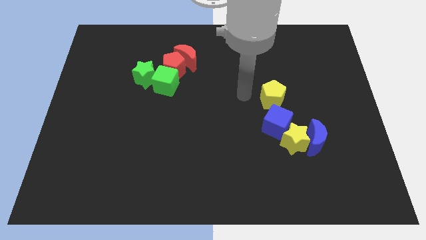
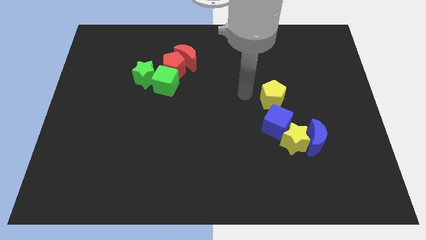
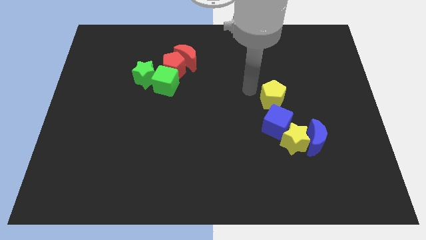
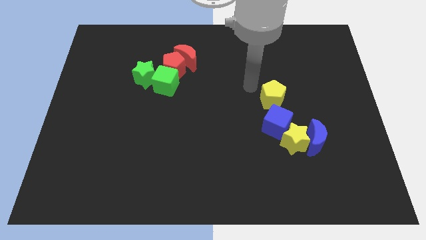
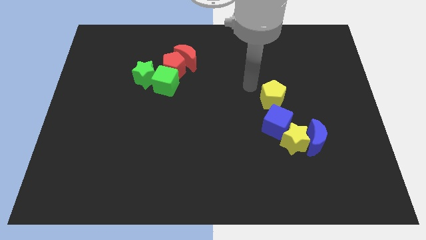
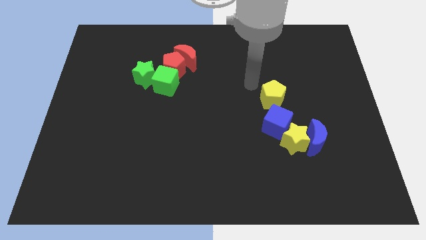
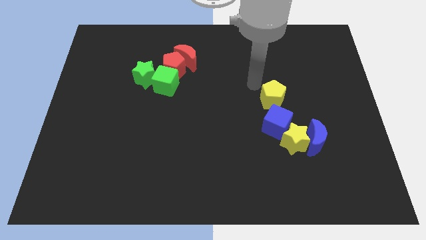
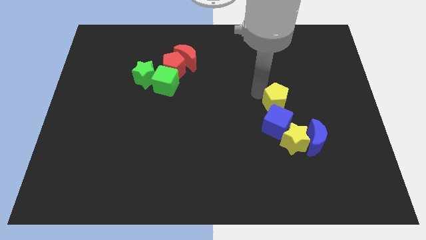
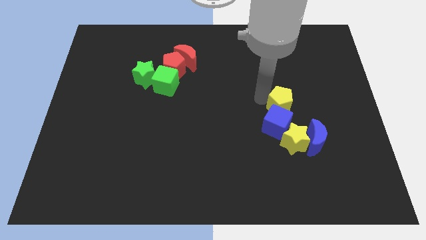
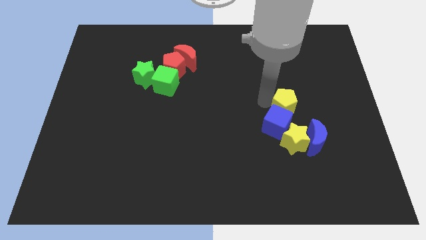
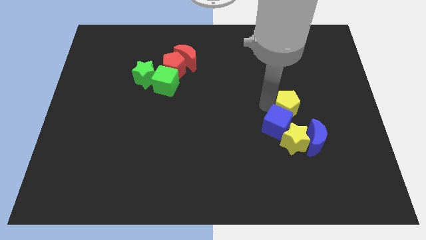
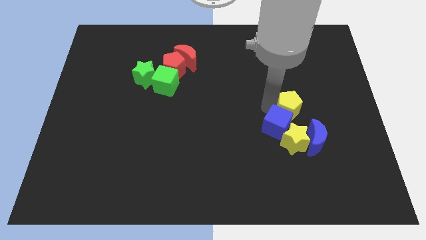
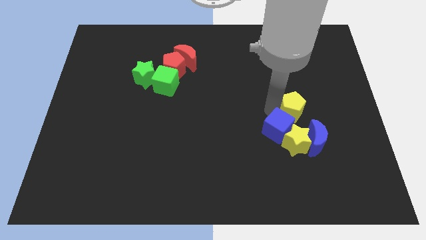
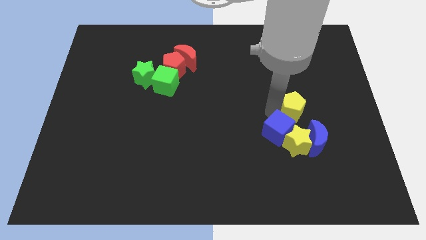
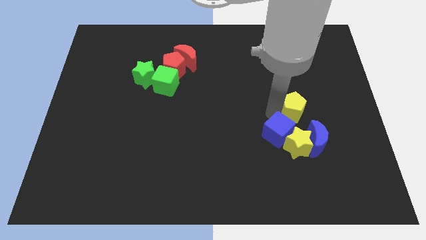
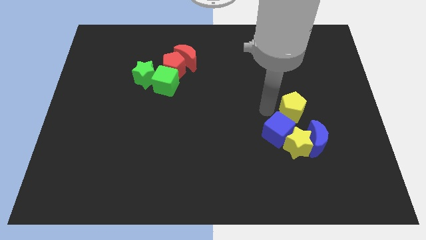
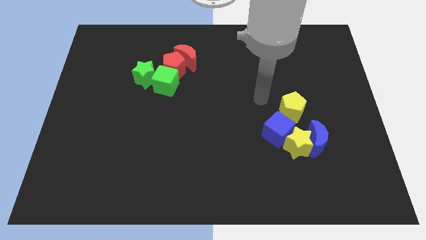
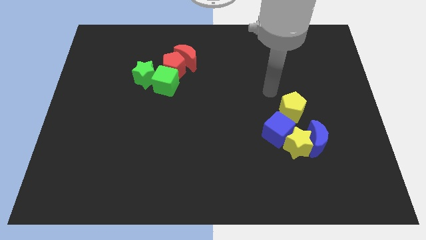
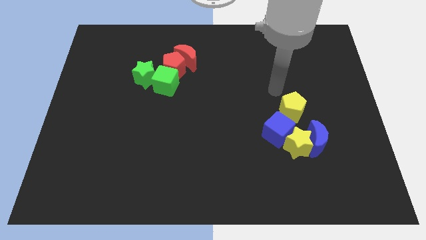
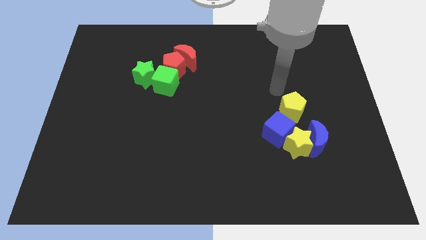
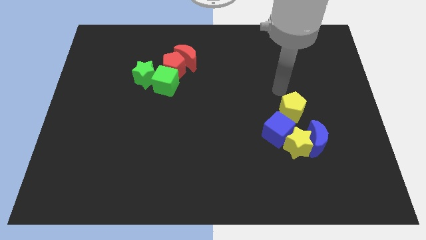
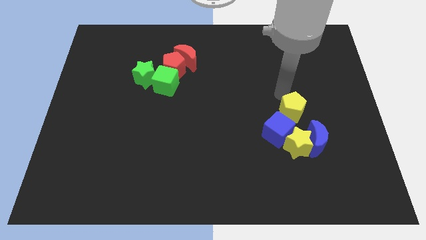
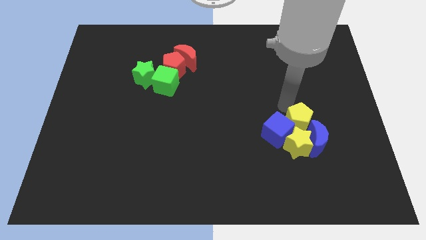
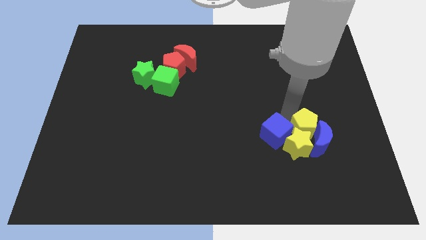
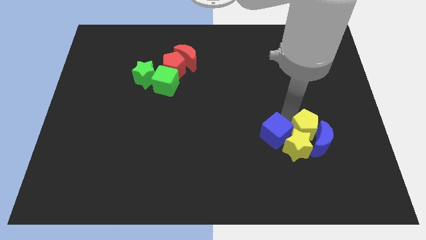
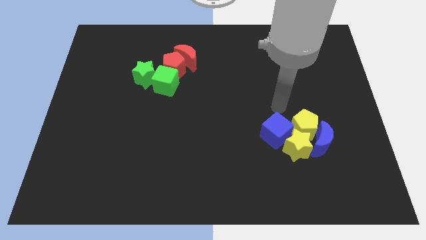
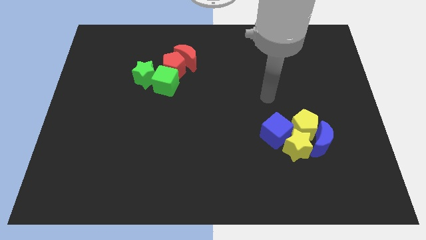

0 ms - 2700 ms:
move the yellow pentagon into the group of blue blocks and yellow star

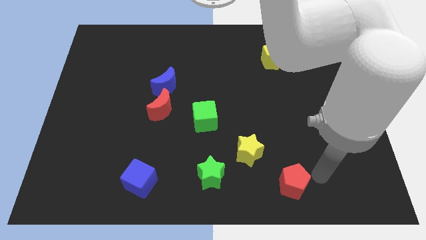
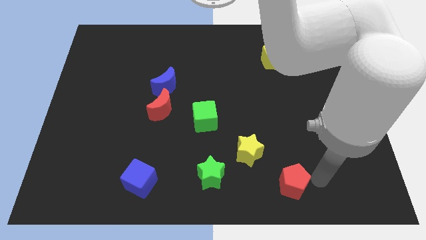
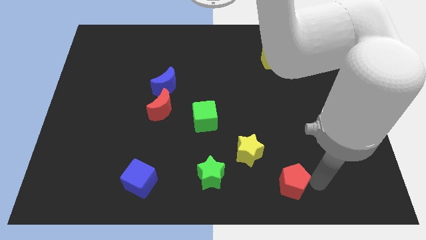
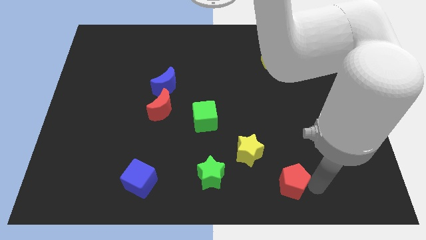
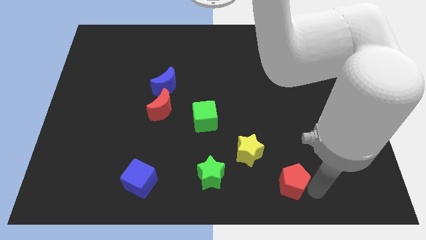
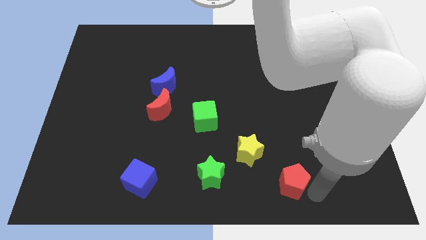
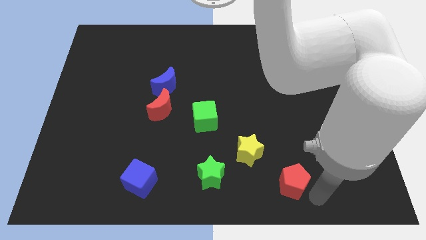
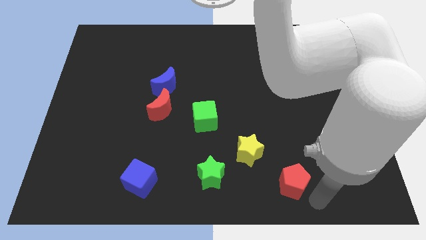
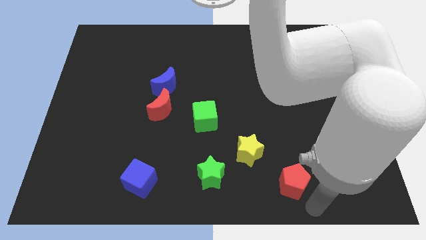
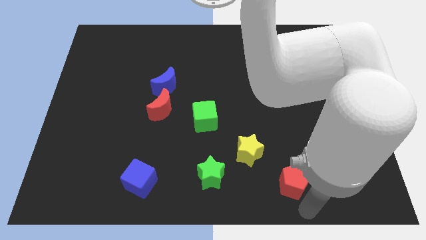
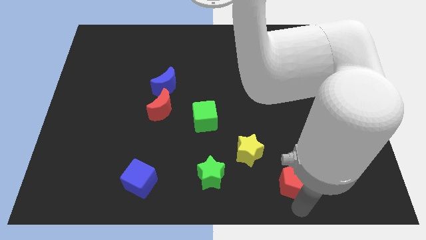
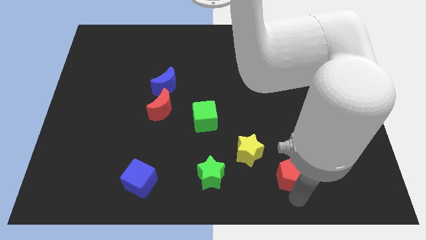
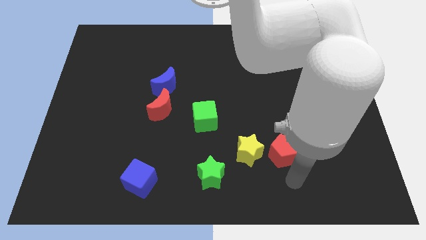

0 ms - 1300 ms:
push the red pentagon to the right of the yellow star

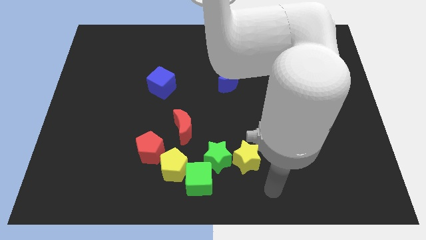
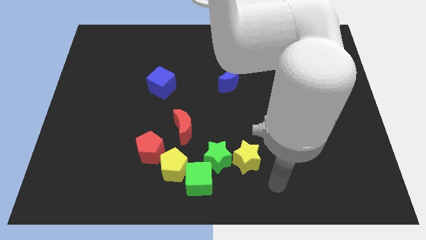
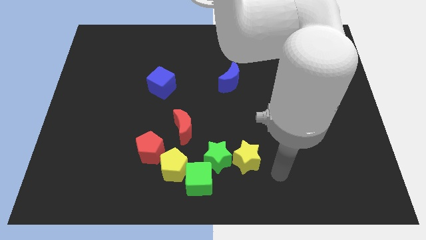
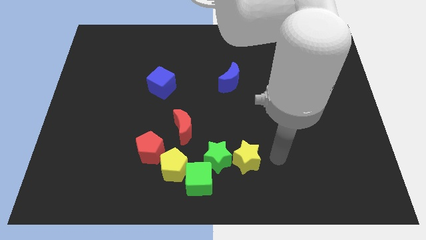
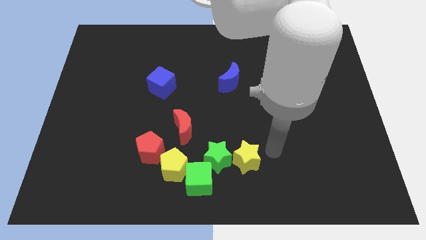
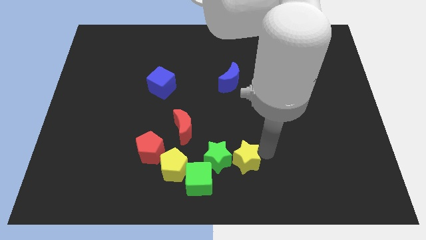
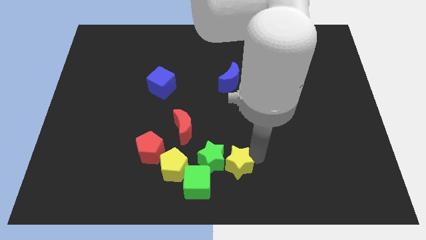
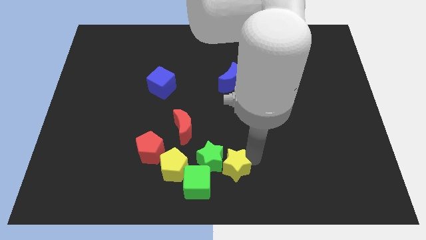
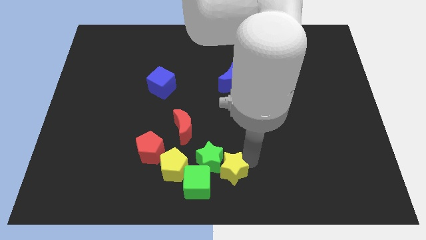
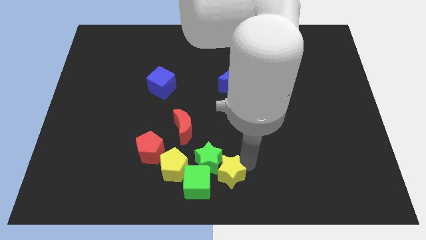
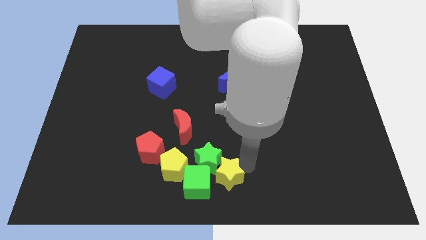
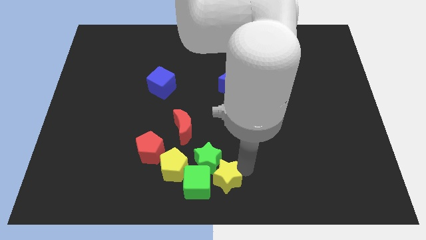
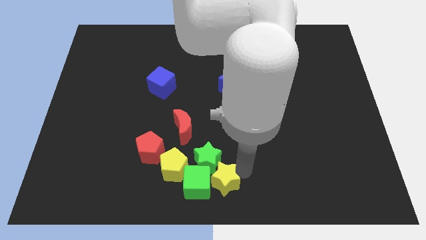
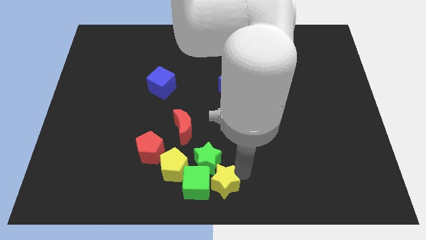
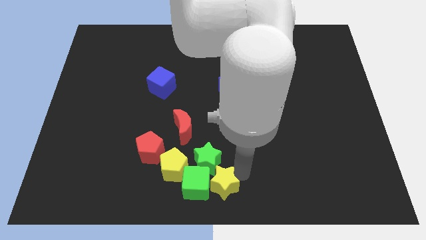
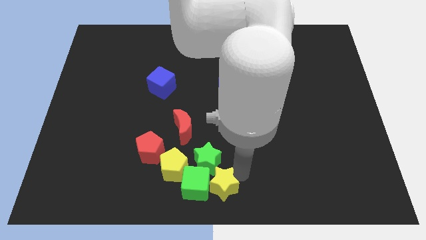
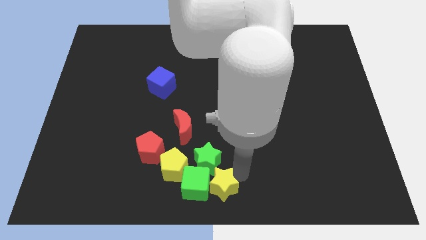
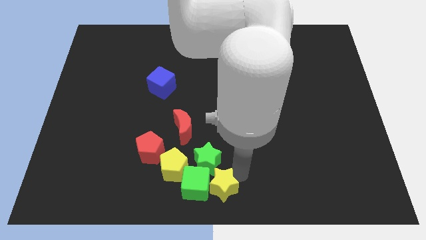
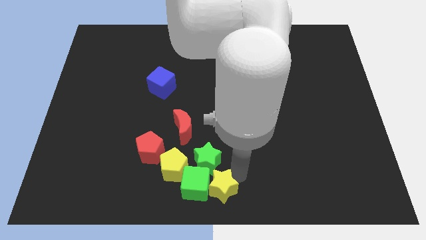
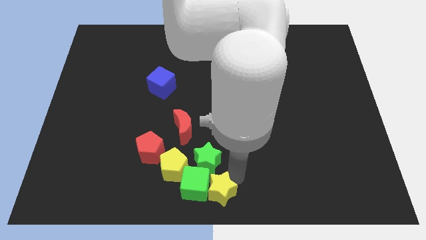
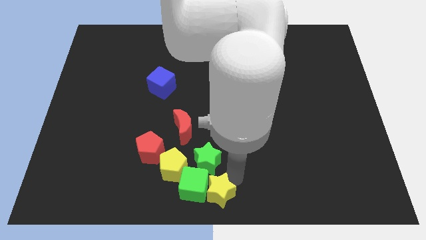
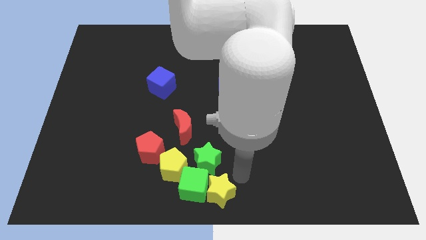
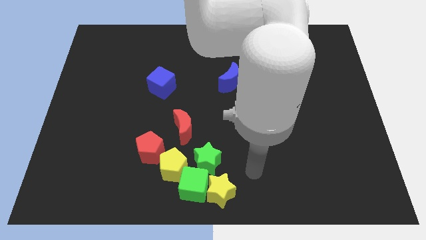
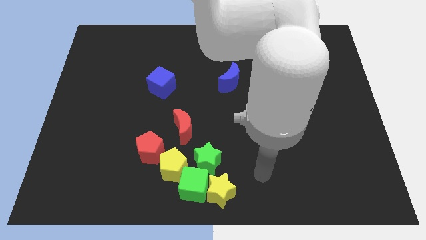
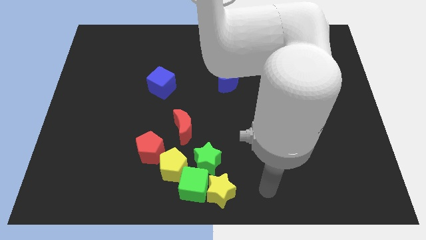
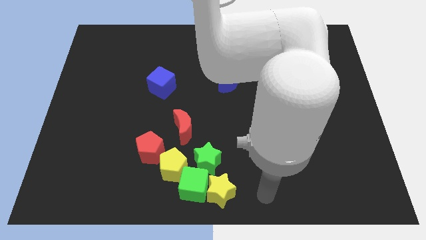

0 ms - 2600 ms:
push the yellow star into green cube to the right

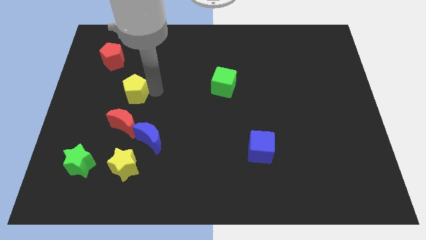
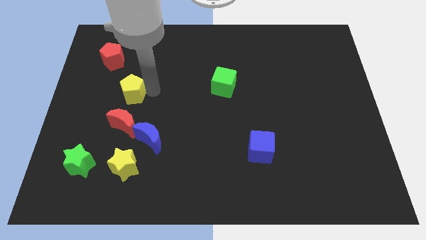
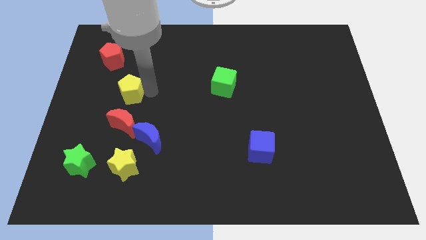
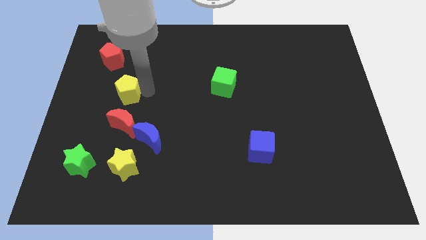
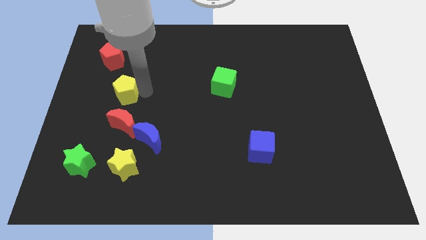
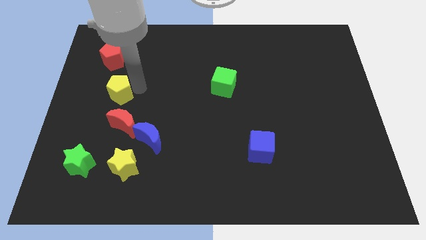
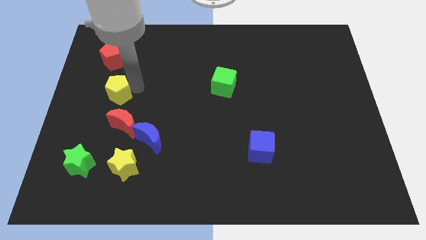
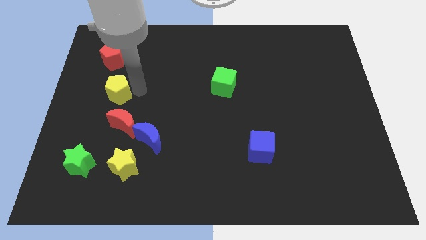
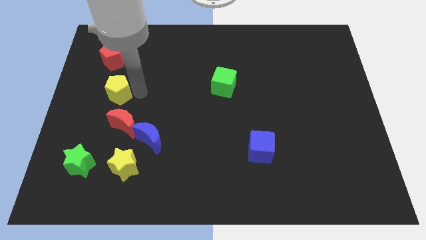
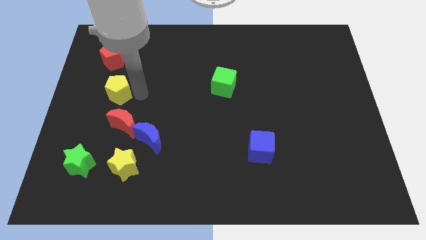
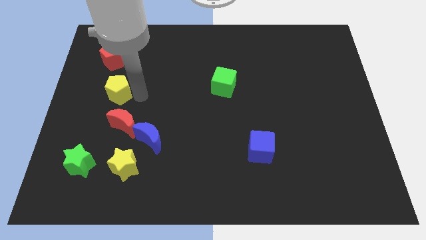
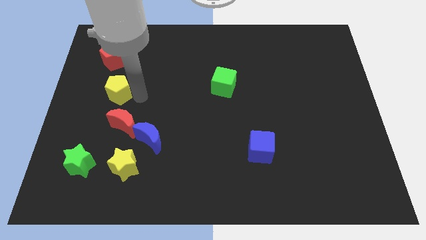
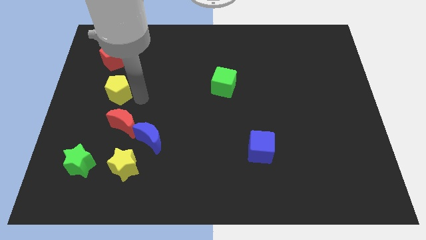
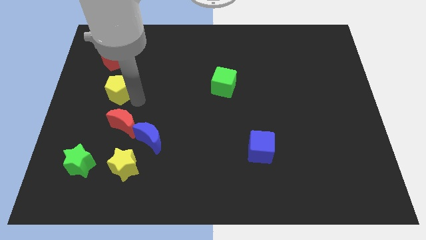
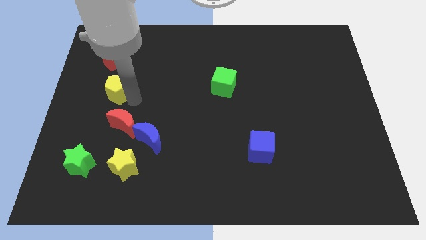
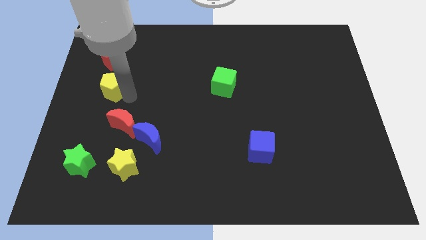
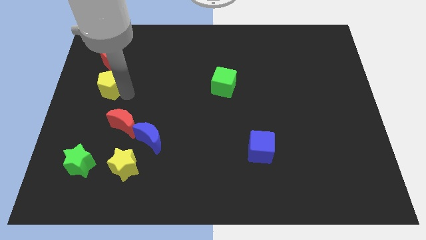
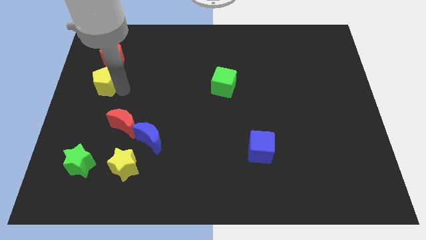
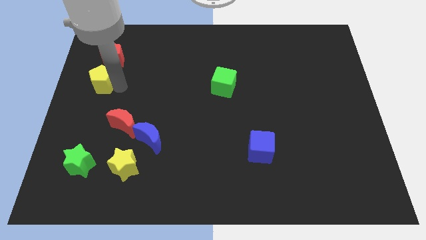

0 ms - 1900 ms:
move the yellow pentagon slightly to the left

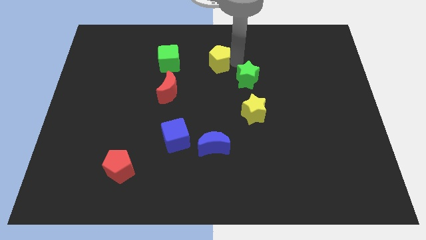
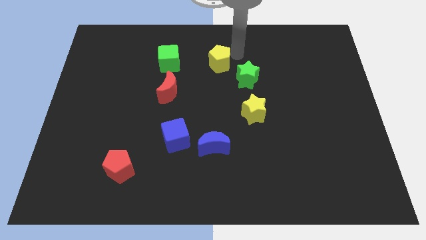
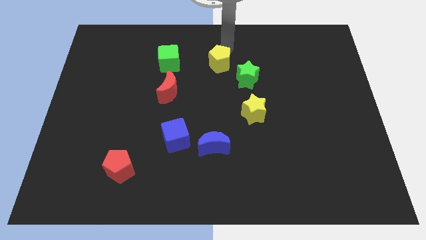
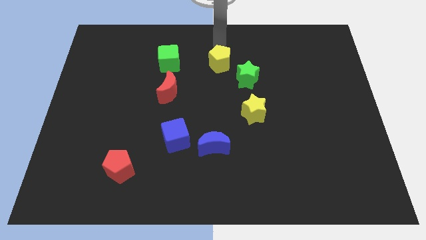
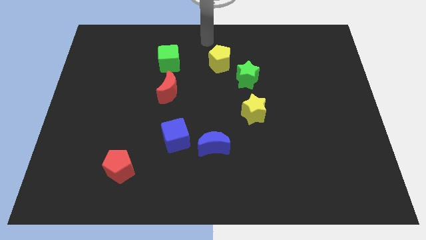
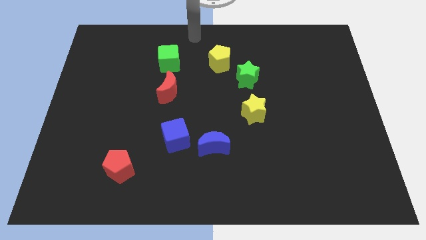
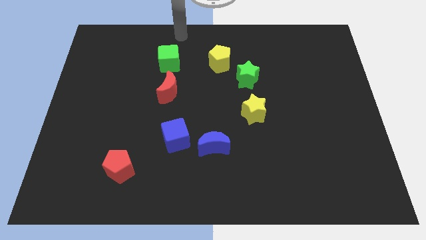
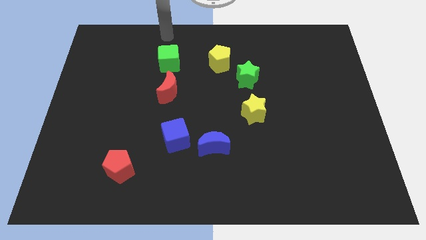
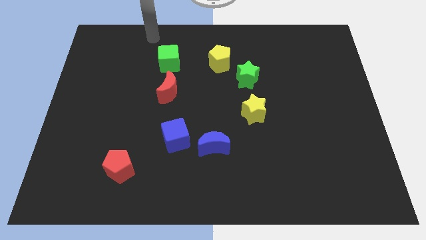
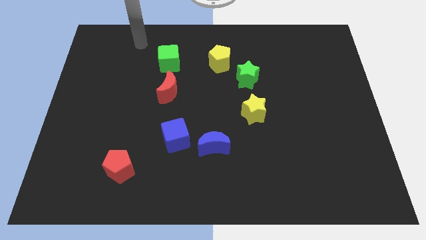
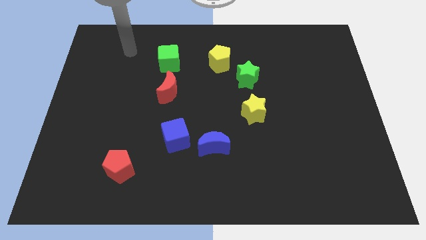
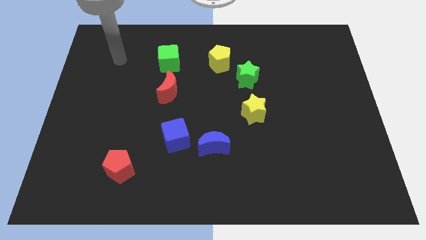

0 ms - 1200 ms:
put your arm away from the yellow pentagon
